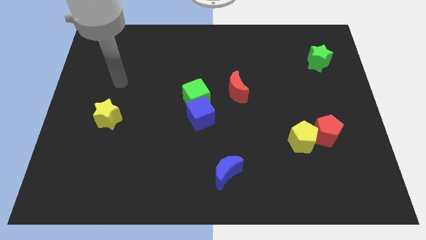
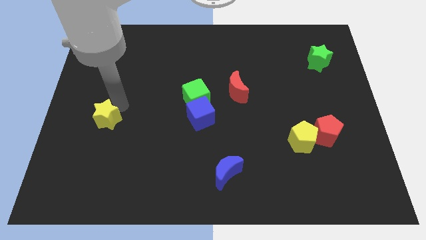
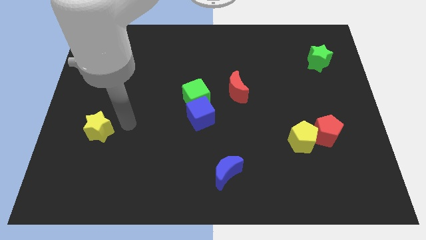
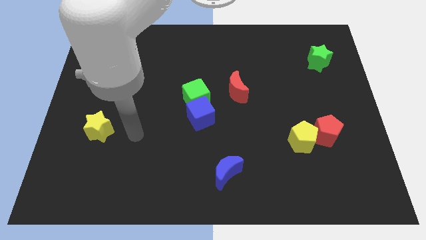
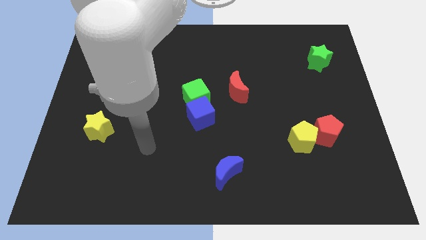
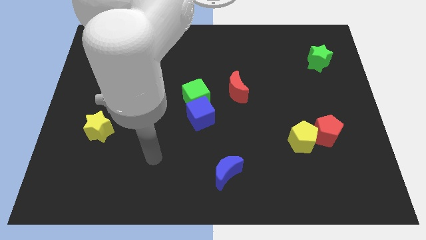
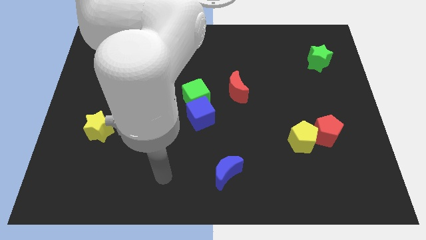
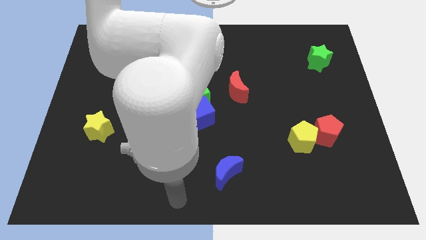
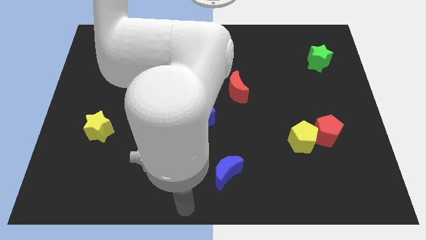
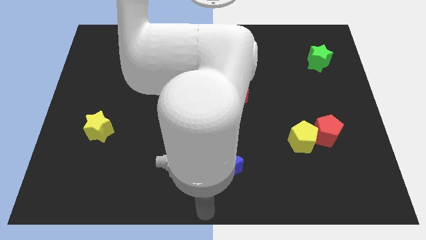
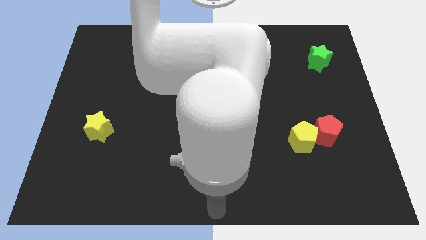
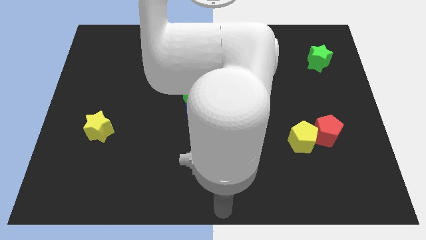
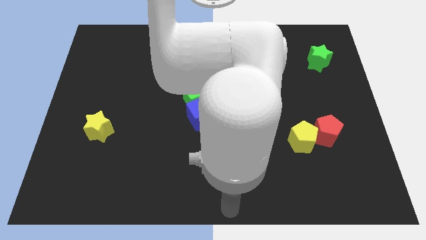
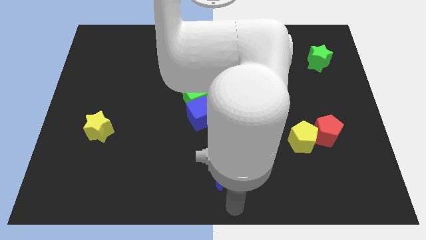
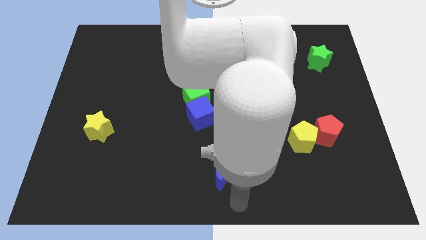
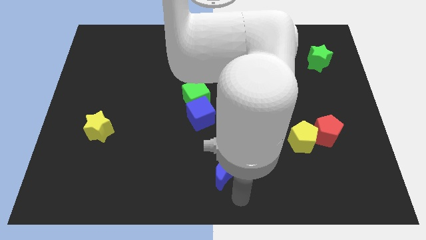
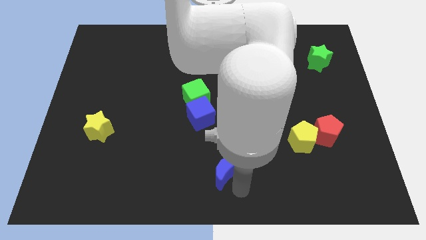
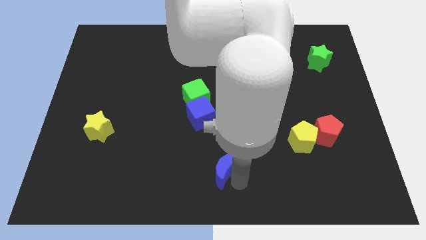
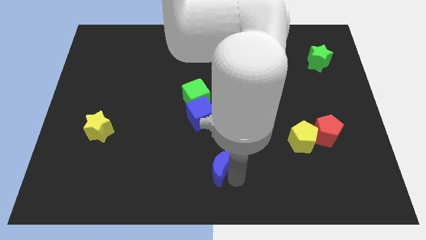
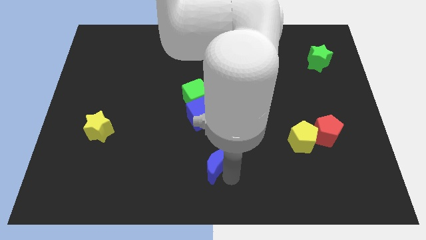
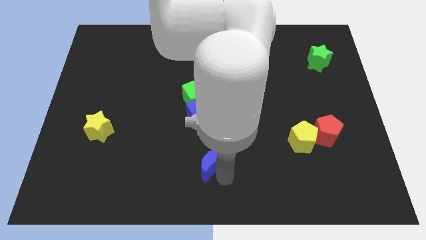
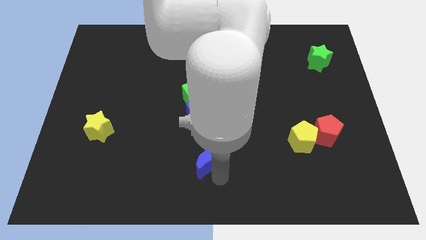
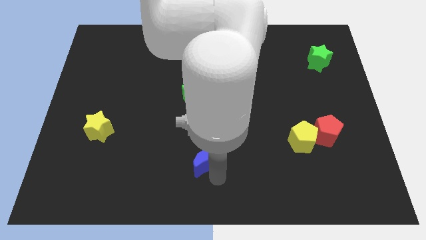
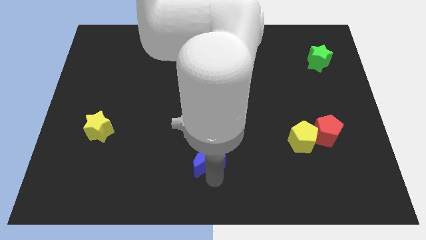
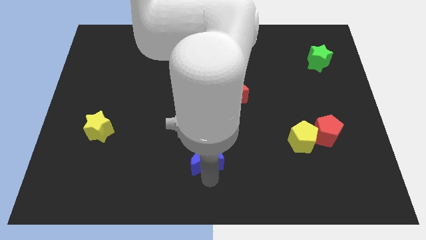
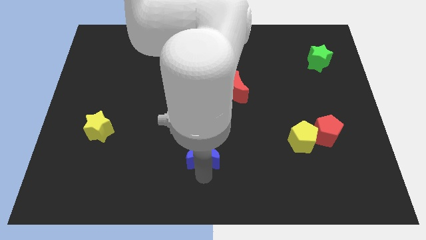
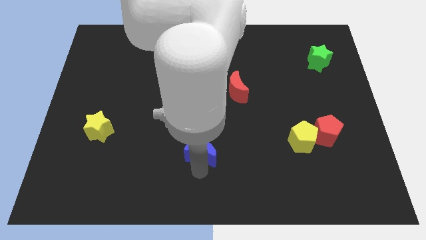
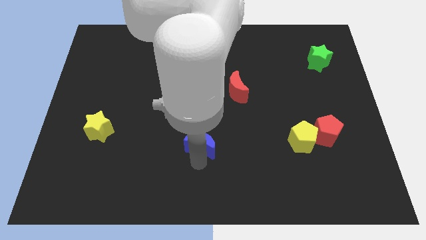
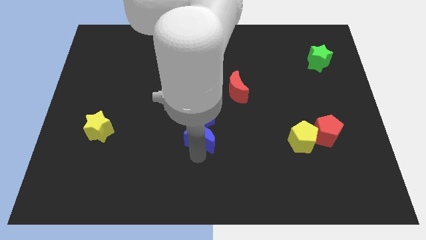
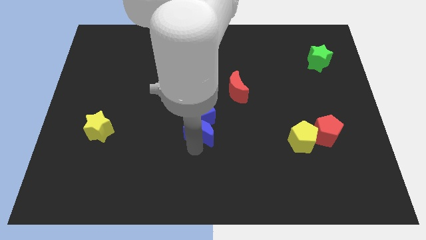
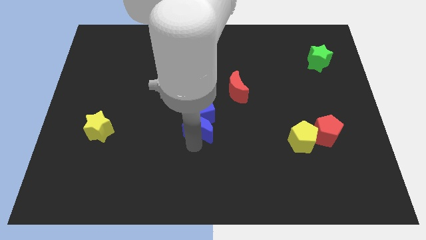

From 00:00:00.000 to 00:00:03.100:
move the blue moon to the blue cube

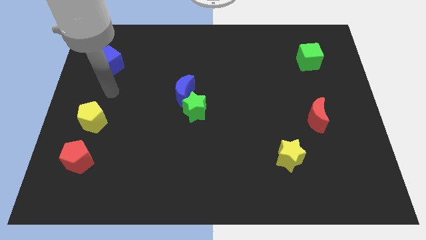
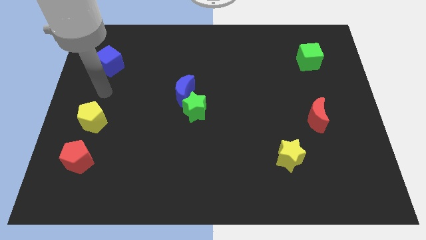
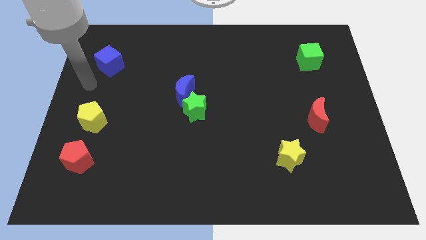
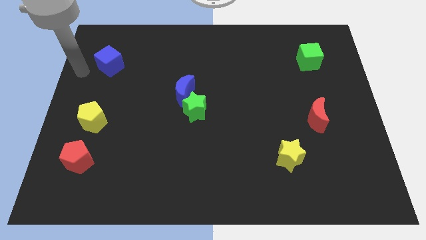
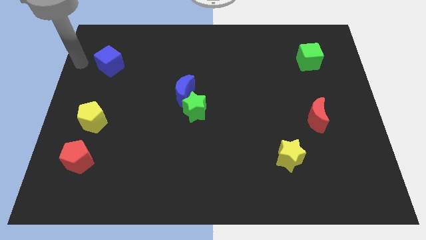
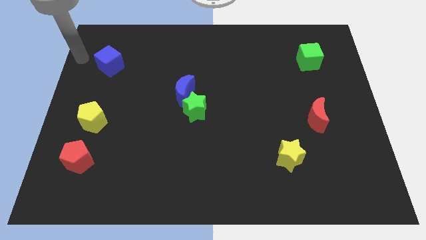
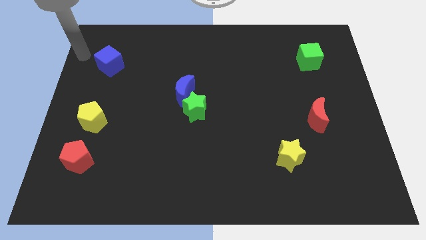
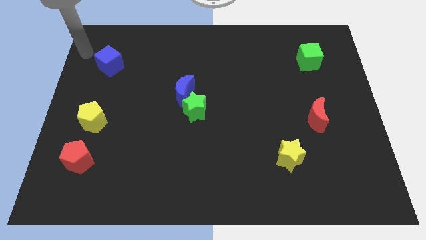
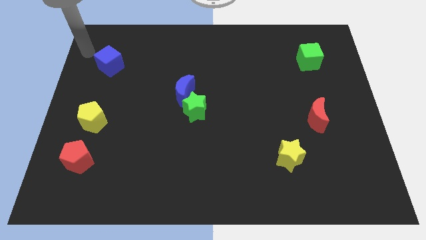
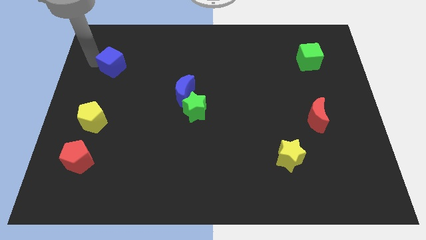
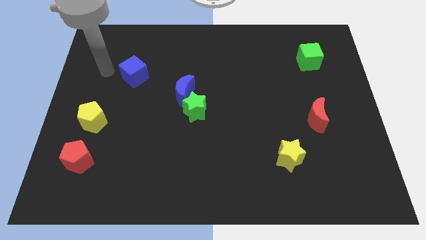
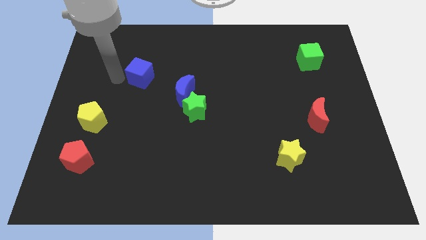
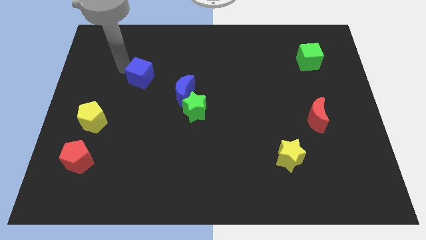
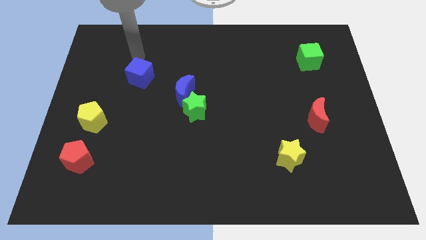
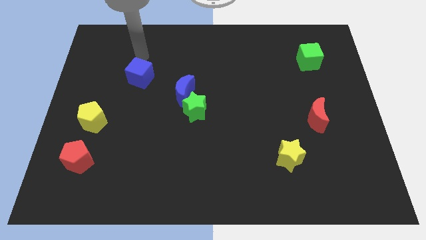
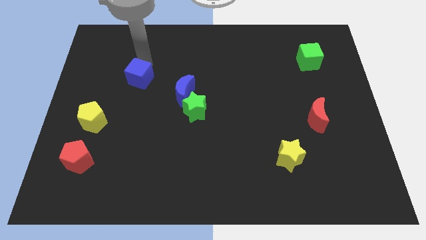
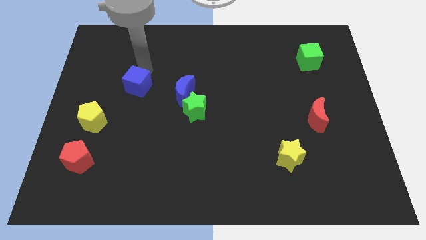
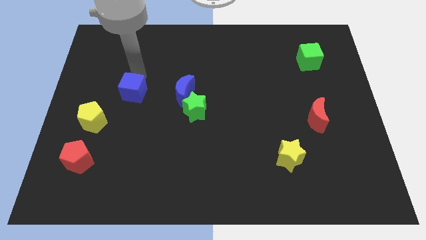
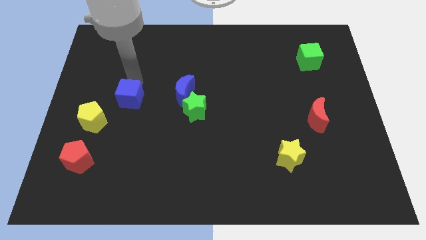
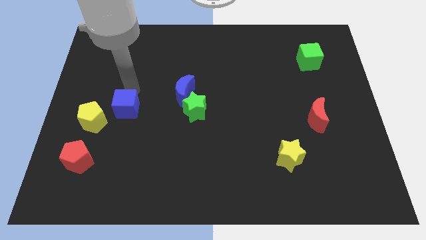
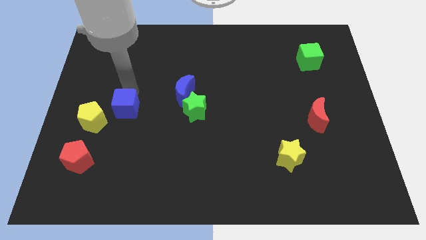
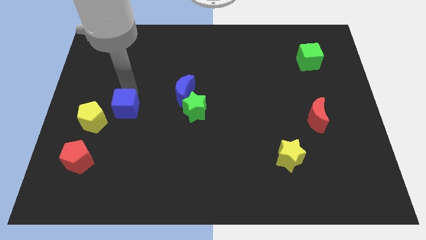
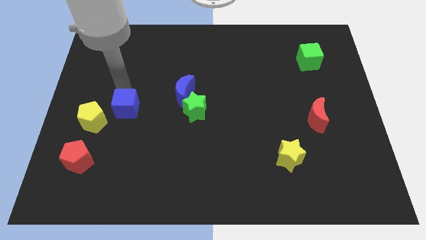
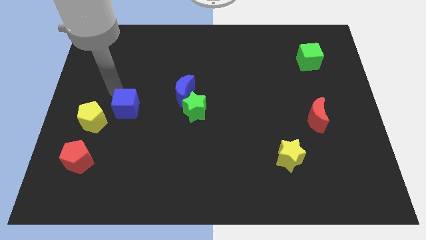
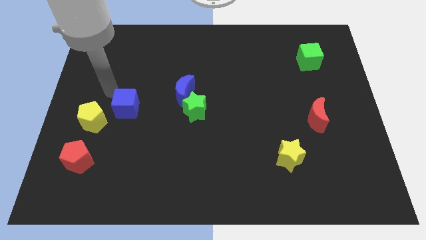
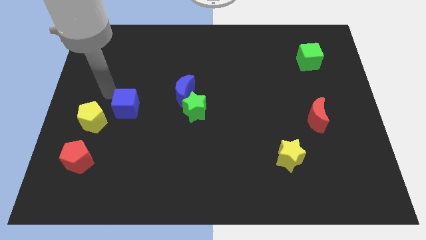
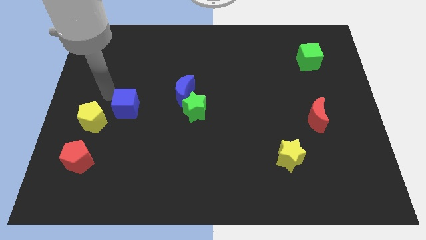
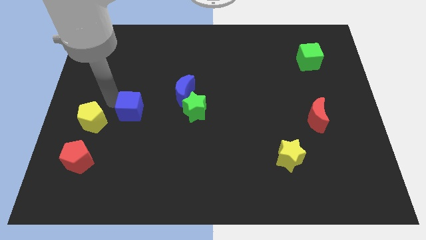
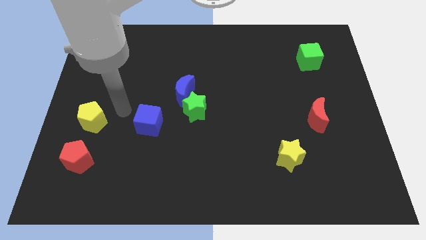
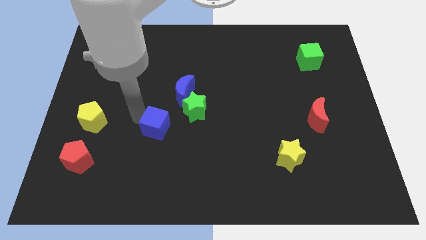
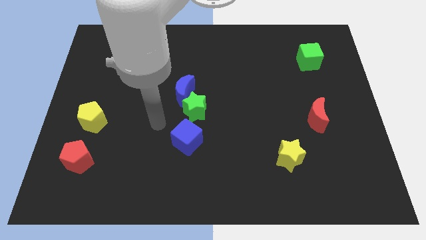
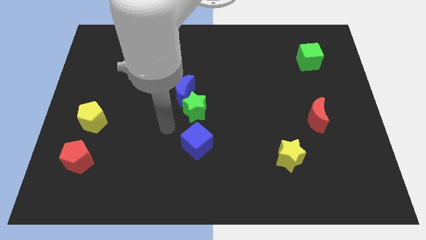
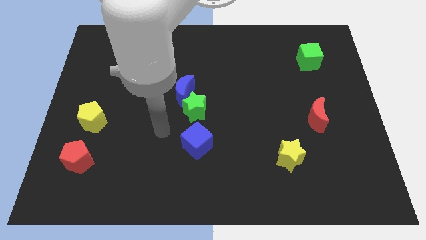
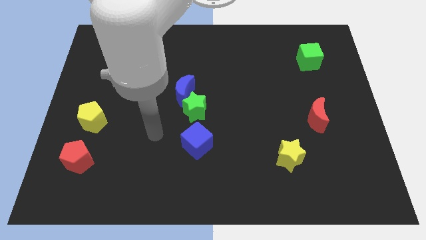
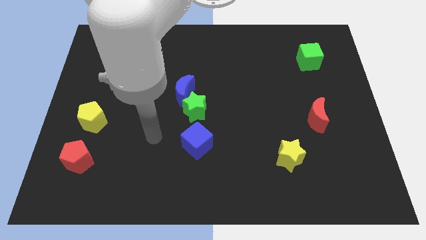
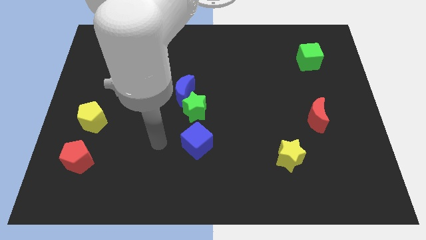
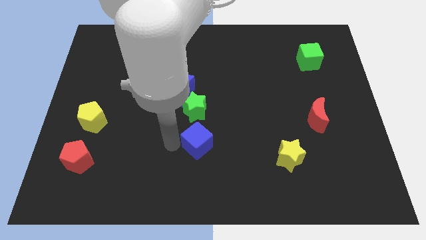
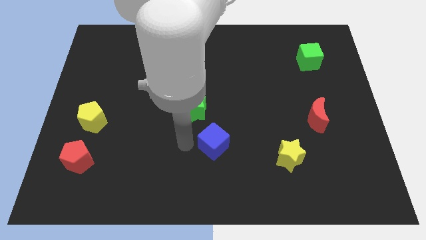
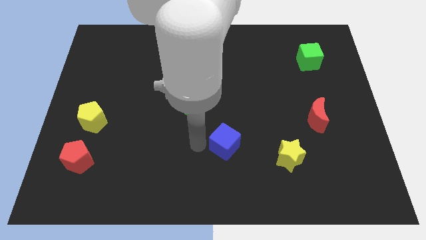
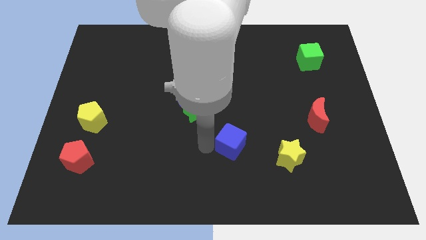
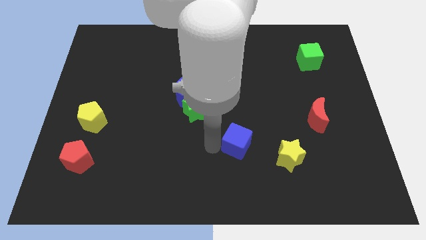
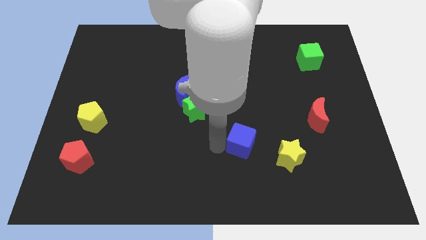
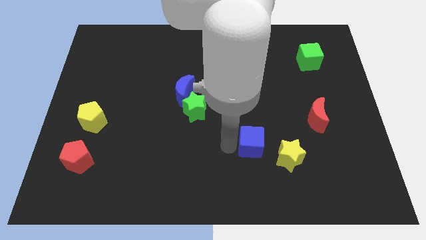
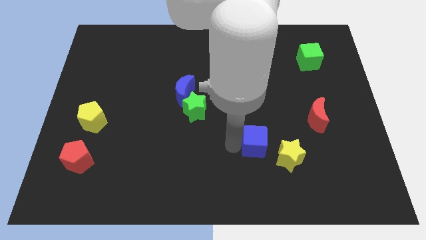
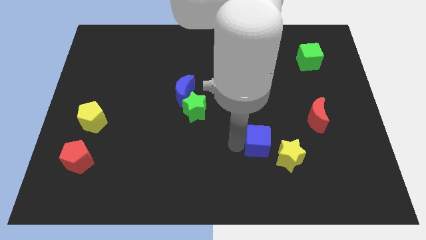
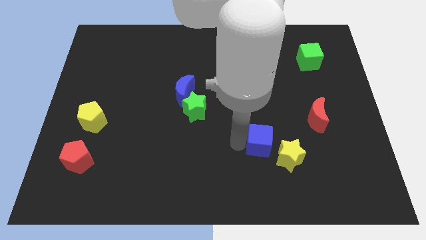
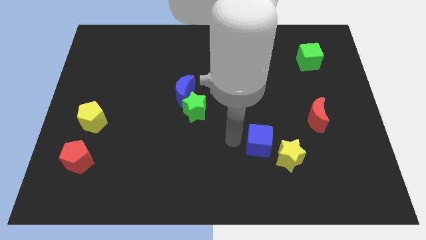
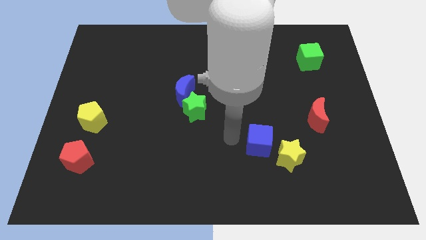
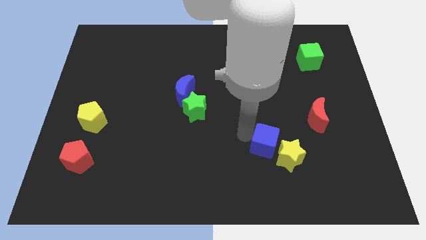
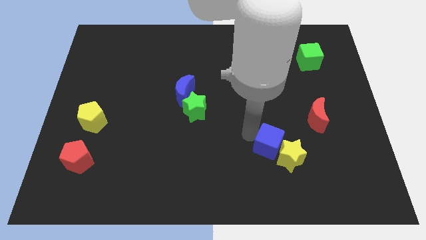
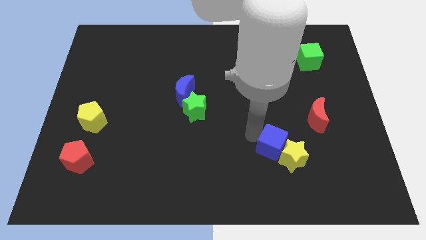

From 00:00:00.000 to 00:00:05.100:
push the blue cube to the yellow star
